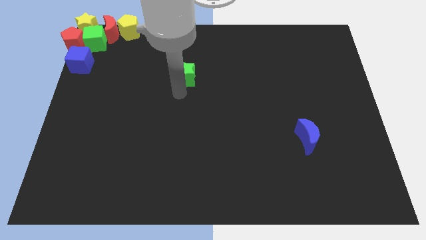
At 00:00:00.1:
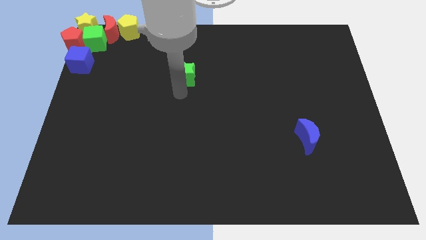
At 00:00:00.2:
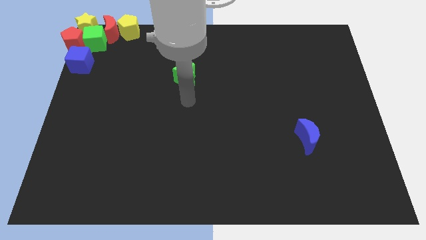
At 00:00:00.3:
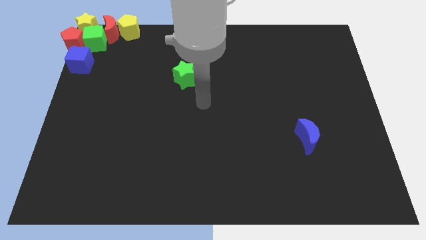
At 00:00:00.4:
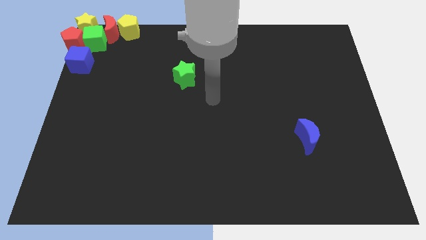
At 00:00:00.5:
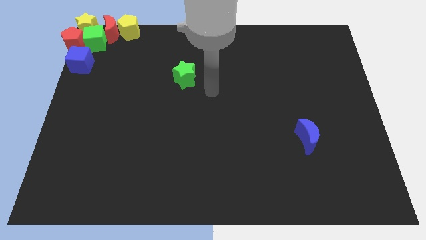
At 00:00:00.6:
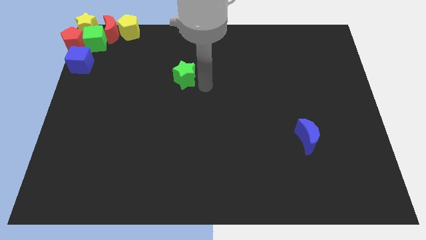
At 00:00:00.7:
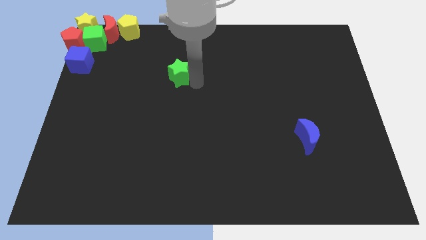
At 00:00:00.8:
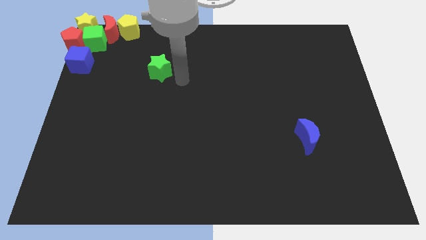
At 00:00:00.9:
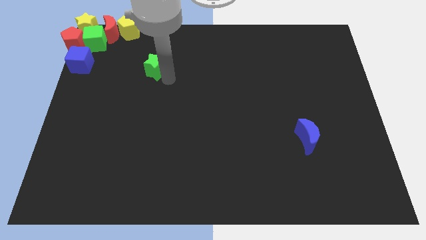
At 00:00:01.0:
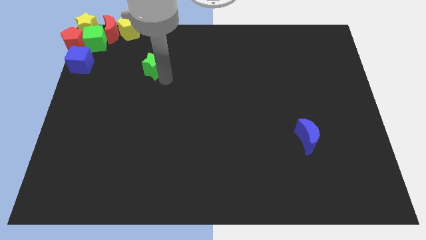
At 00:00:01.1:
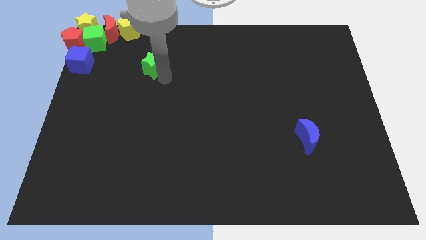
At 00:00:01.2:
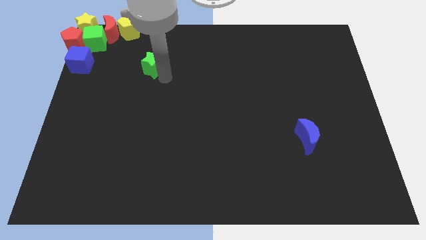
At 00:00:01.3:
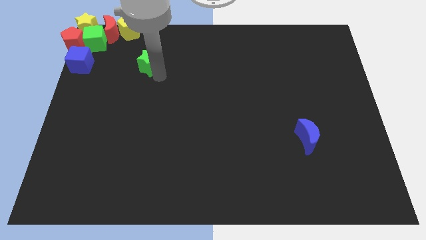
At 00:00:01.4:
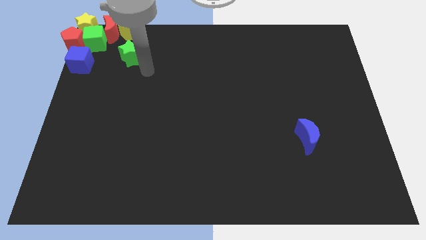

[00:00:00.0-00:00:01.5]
move the green star horizontally right to the blue cube

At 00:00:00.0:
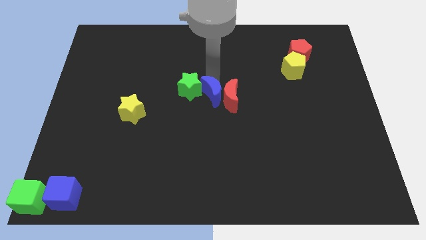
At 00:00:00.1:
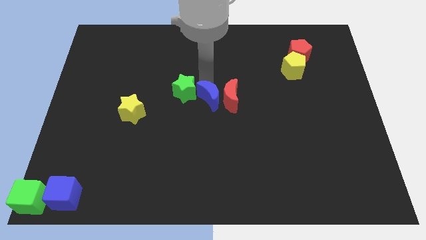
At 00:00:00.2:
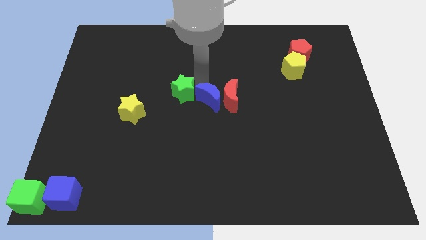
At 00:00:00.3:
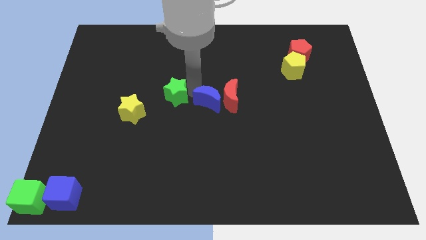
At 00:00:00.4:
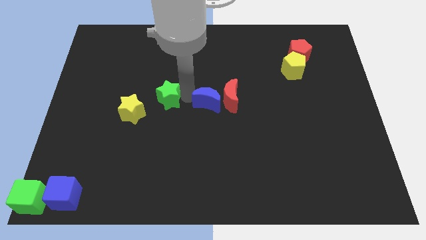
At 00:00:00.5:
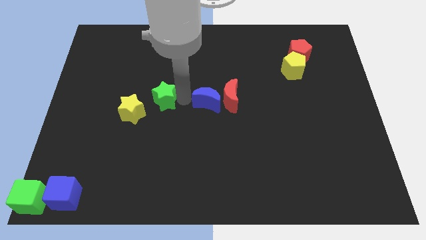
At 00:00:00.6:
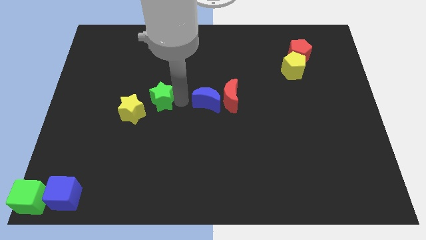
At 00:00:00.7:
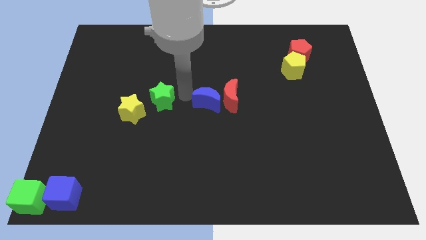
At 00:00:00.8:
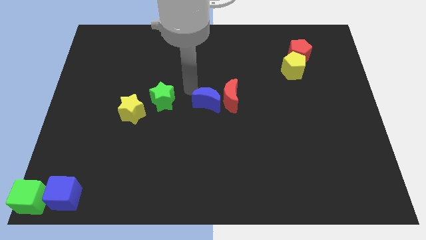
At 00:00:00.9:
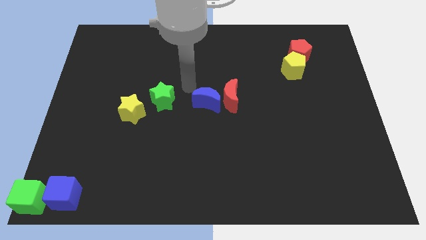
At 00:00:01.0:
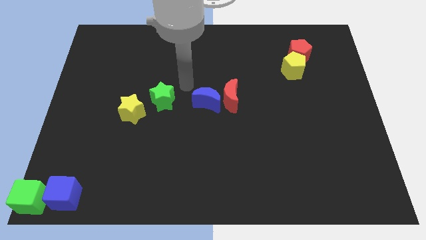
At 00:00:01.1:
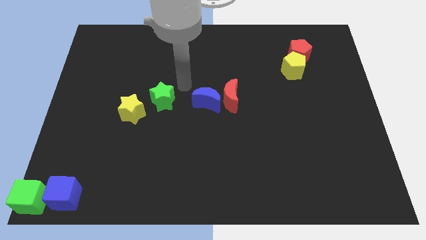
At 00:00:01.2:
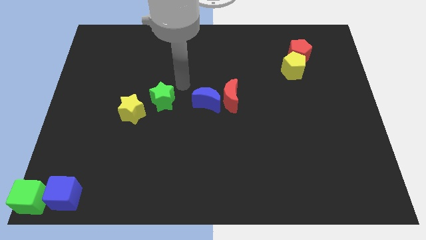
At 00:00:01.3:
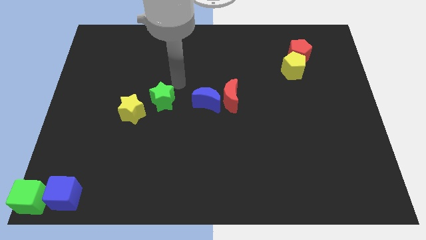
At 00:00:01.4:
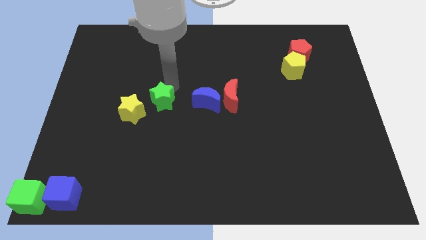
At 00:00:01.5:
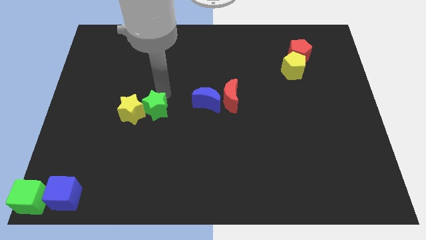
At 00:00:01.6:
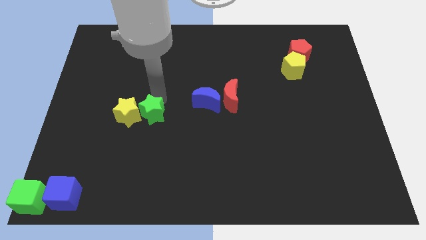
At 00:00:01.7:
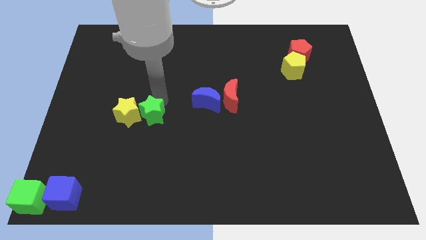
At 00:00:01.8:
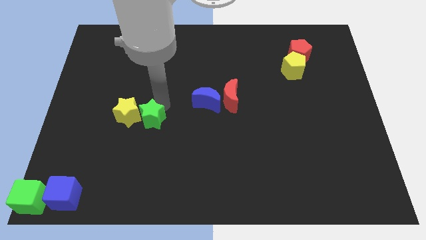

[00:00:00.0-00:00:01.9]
separate the blue crescent and the green star

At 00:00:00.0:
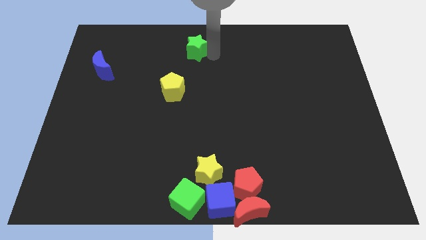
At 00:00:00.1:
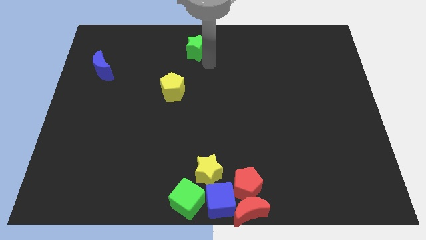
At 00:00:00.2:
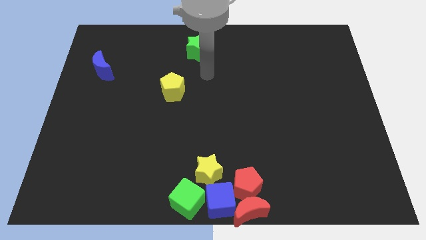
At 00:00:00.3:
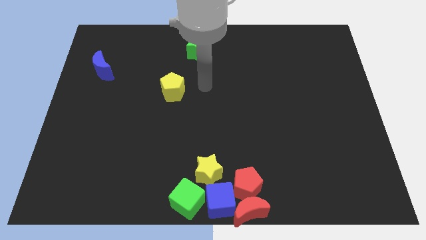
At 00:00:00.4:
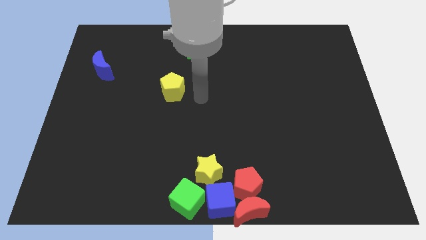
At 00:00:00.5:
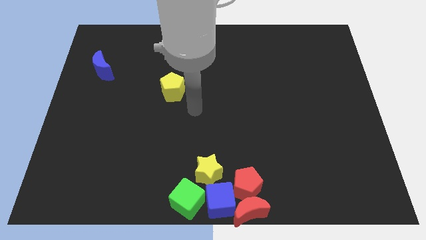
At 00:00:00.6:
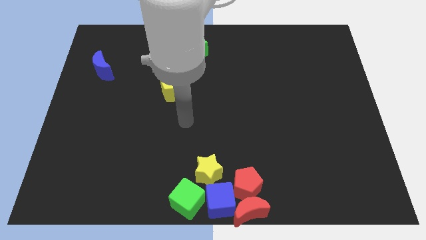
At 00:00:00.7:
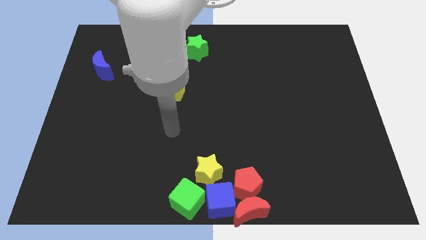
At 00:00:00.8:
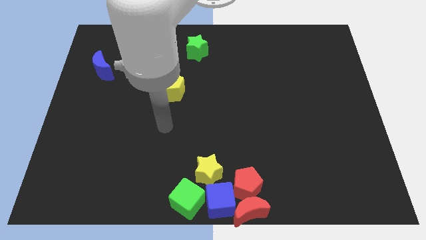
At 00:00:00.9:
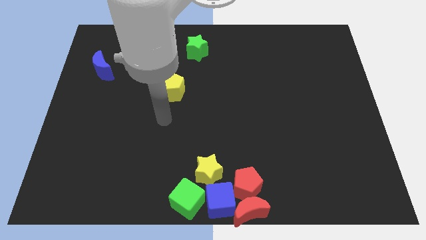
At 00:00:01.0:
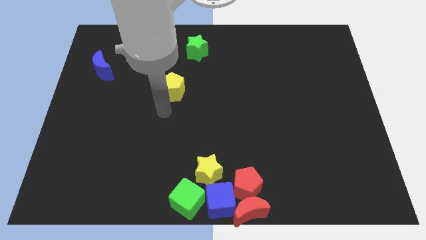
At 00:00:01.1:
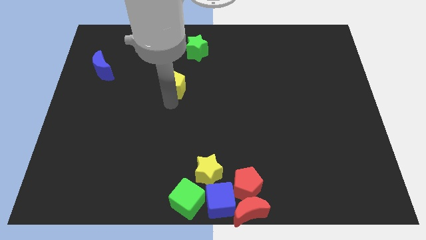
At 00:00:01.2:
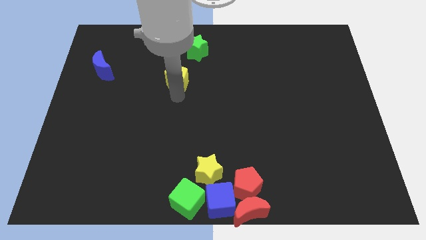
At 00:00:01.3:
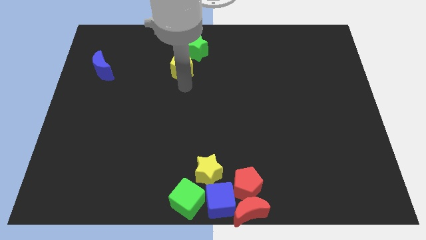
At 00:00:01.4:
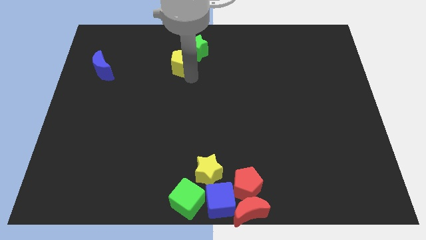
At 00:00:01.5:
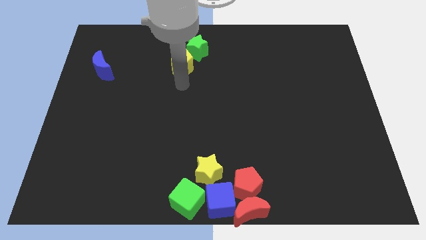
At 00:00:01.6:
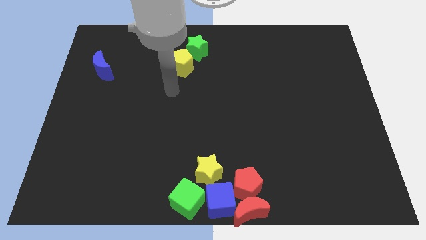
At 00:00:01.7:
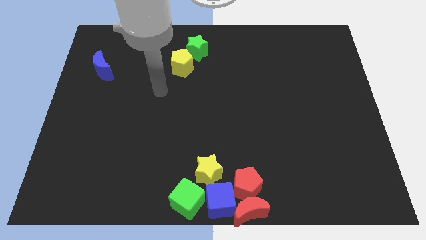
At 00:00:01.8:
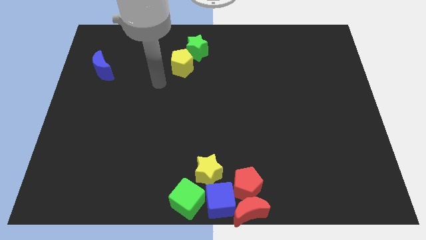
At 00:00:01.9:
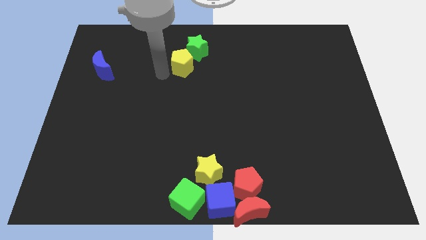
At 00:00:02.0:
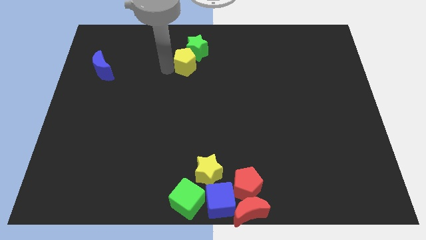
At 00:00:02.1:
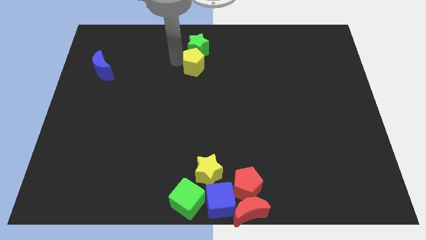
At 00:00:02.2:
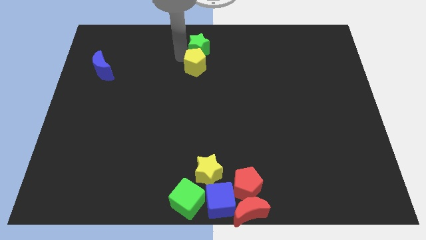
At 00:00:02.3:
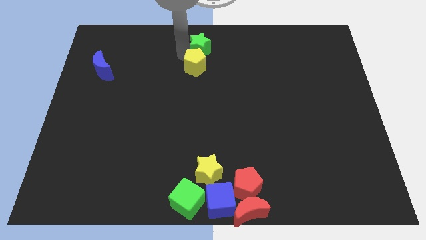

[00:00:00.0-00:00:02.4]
push the yellow pentagon to the bottom of the green star

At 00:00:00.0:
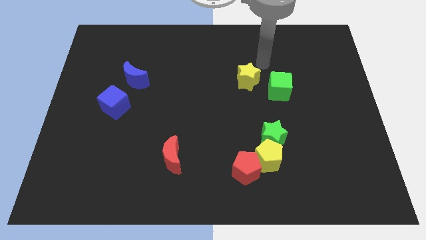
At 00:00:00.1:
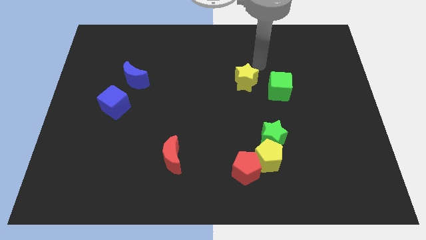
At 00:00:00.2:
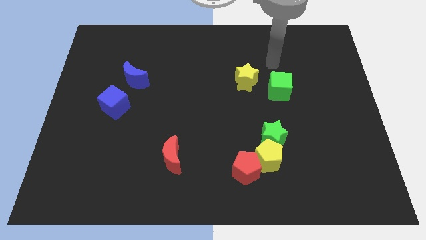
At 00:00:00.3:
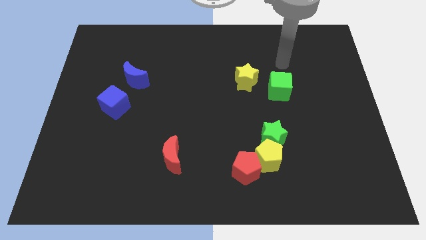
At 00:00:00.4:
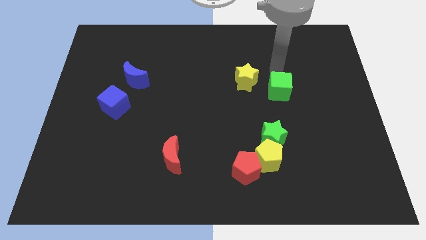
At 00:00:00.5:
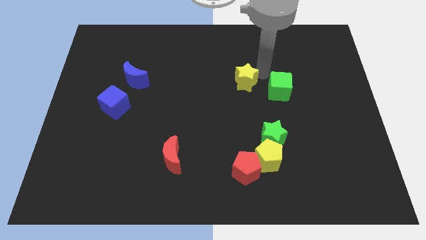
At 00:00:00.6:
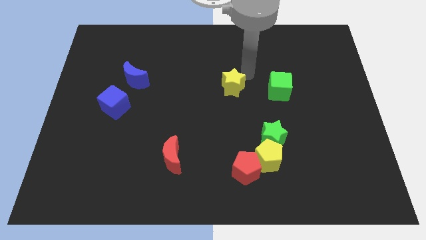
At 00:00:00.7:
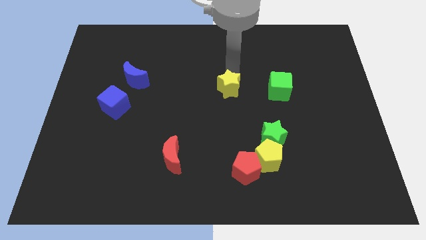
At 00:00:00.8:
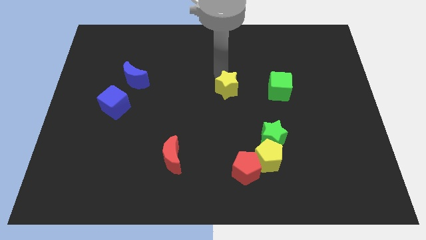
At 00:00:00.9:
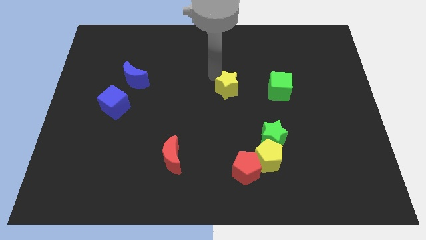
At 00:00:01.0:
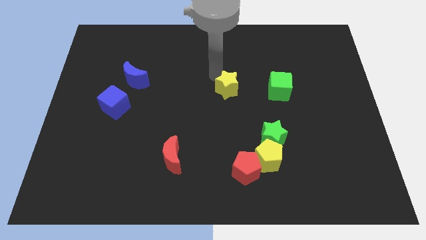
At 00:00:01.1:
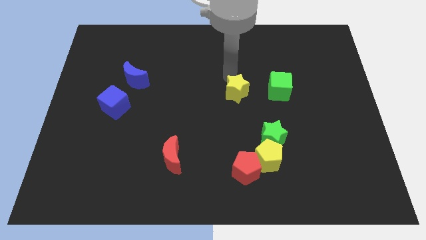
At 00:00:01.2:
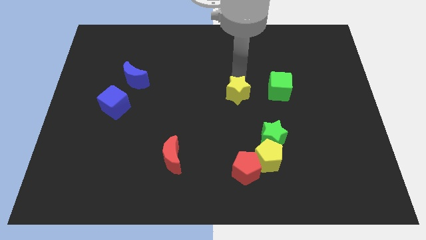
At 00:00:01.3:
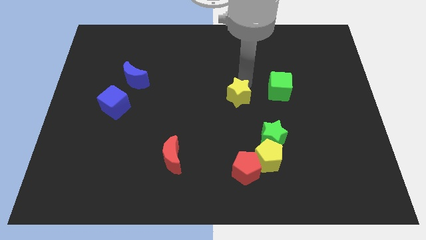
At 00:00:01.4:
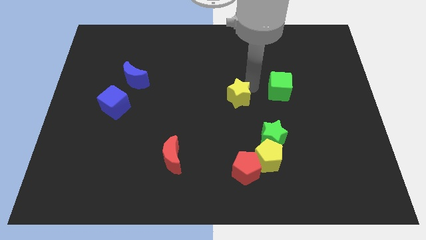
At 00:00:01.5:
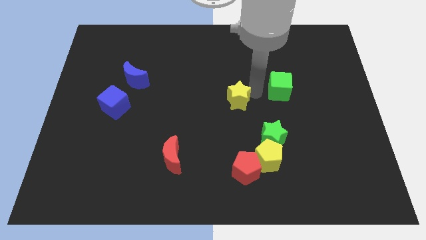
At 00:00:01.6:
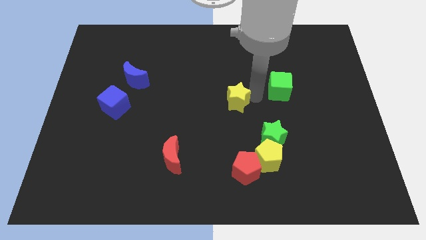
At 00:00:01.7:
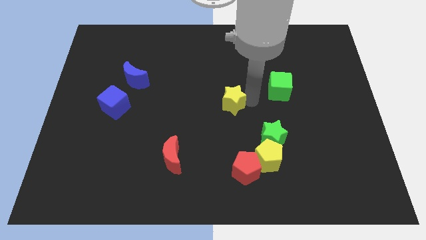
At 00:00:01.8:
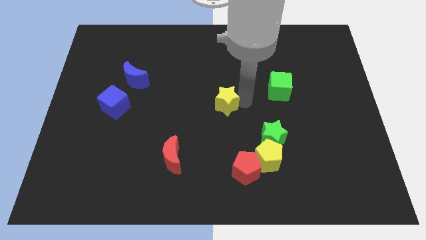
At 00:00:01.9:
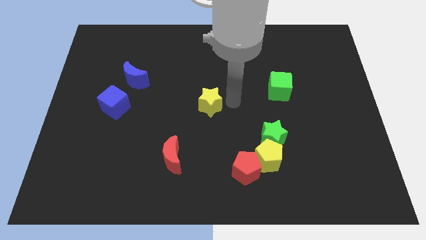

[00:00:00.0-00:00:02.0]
place the yellow star at the center of the board

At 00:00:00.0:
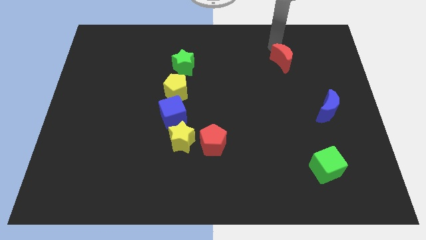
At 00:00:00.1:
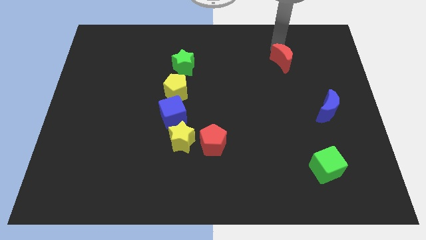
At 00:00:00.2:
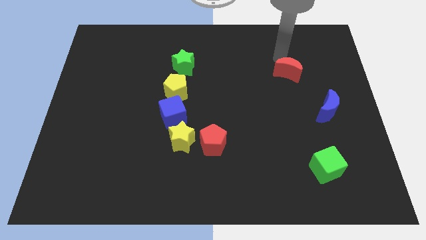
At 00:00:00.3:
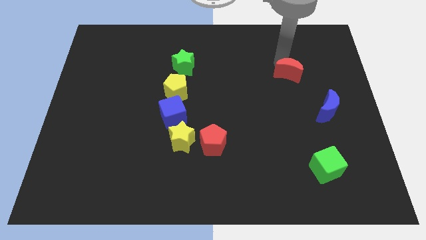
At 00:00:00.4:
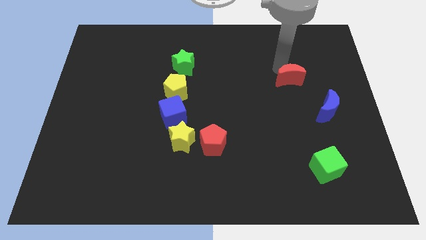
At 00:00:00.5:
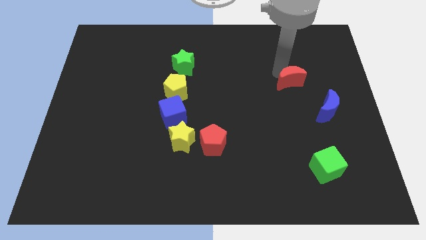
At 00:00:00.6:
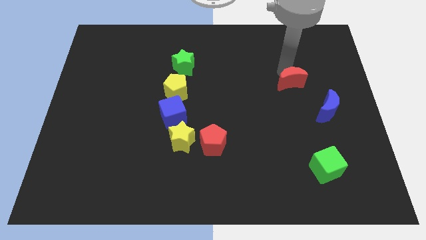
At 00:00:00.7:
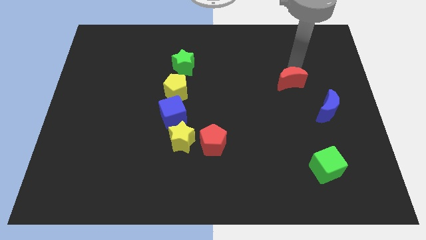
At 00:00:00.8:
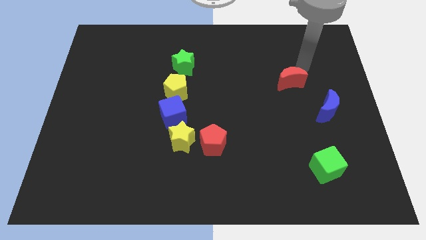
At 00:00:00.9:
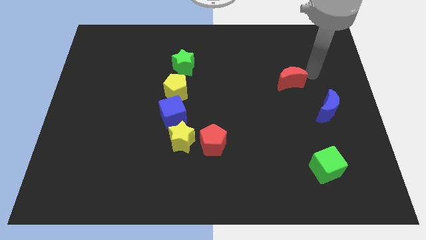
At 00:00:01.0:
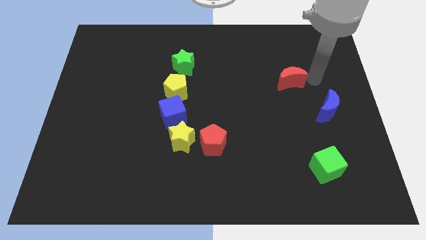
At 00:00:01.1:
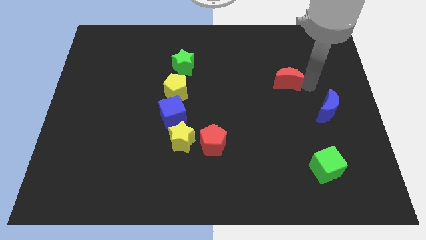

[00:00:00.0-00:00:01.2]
push red crescent downwards
